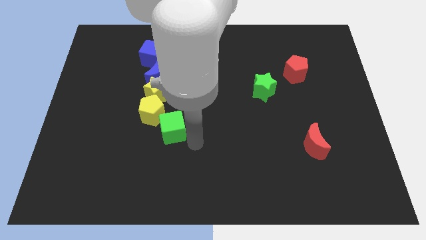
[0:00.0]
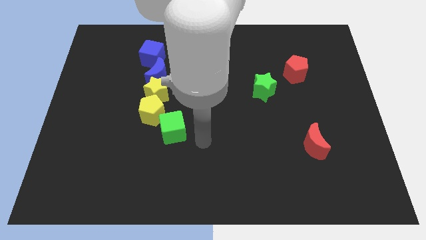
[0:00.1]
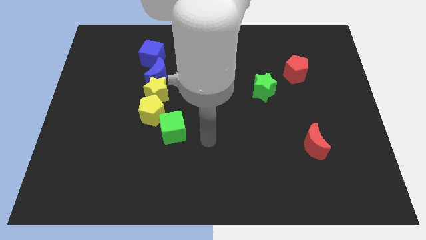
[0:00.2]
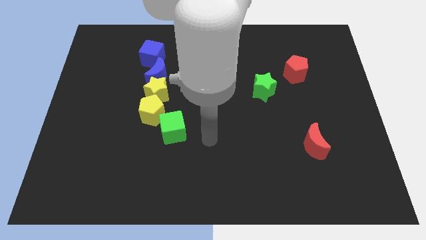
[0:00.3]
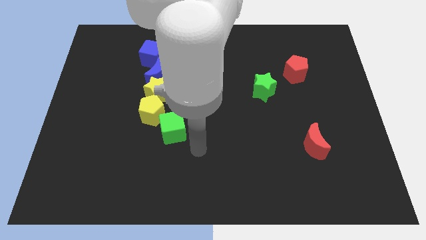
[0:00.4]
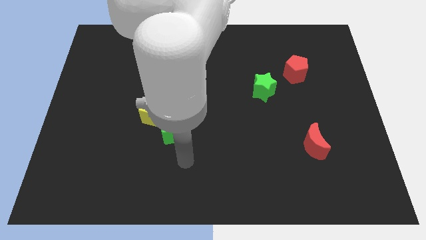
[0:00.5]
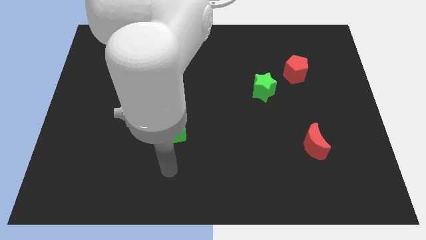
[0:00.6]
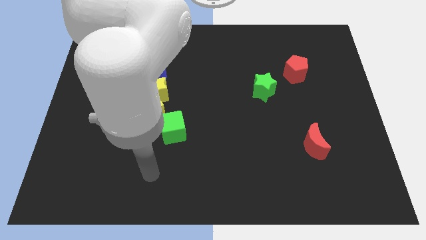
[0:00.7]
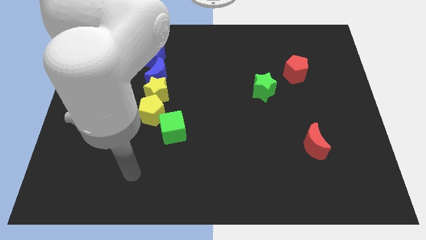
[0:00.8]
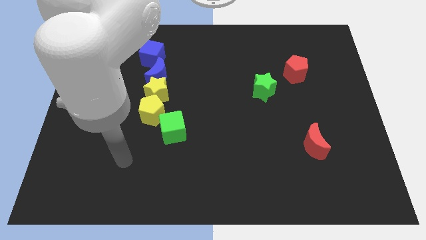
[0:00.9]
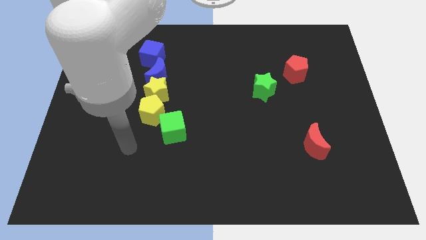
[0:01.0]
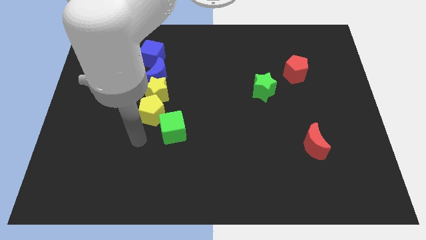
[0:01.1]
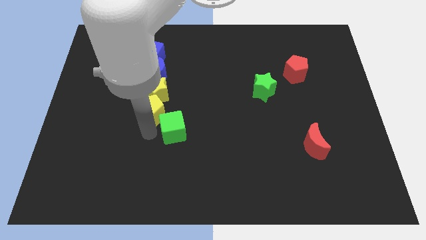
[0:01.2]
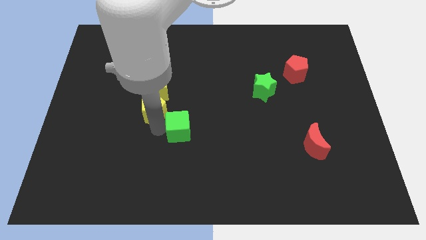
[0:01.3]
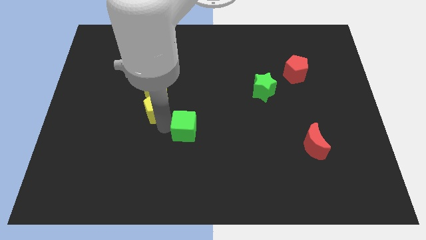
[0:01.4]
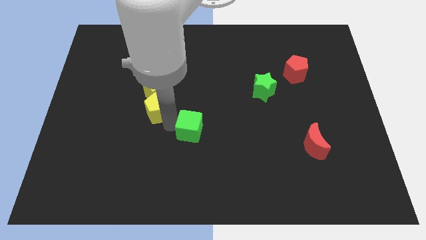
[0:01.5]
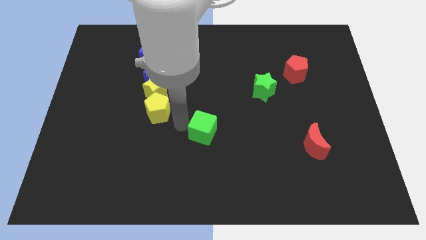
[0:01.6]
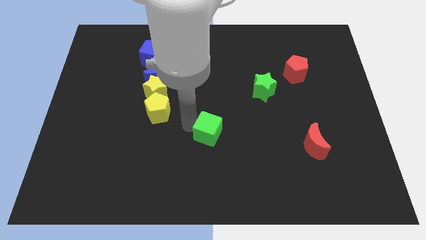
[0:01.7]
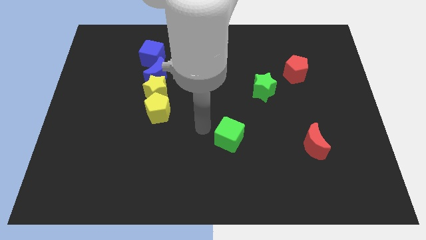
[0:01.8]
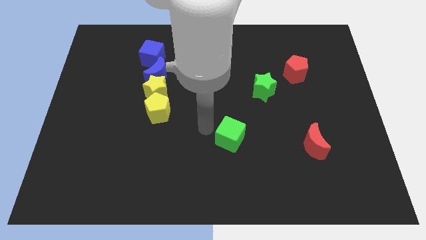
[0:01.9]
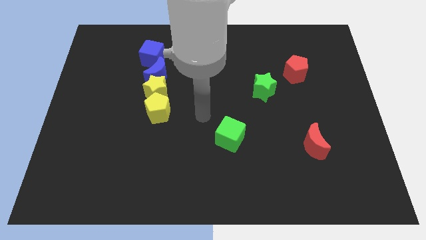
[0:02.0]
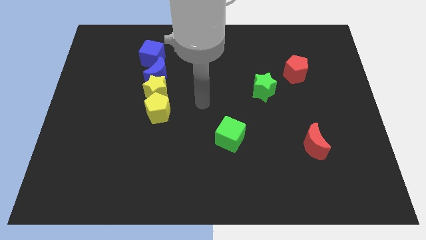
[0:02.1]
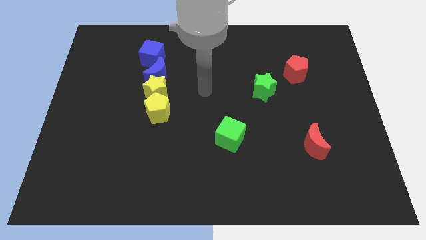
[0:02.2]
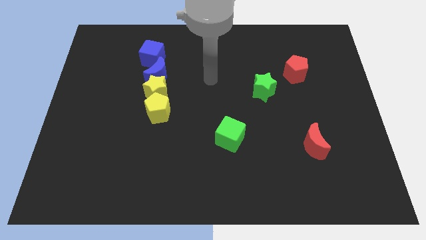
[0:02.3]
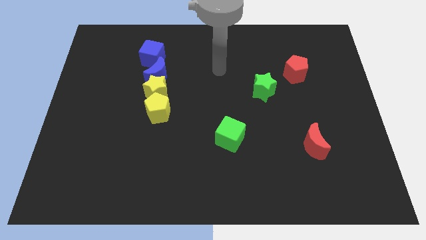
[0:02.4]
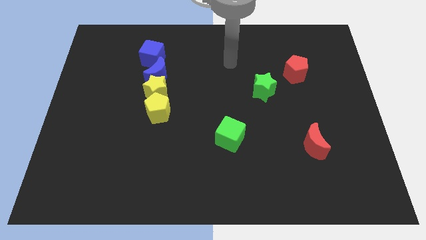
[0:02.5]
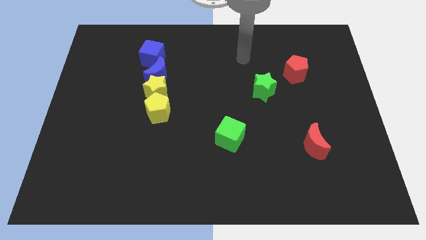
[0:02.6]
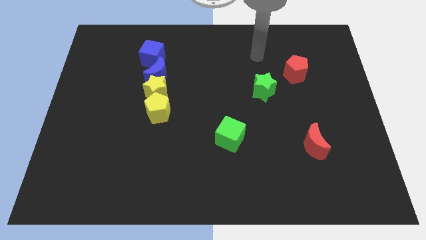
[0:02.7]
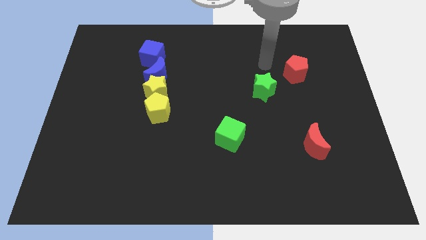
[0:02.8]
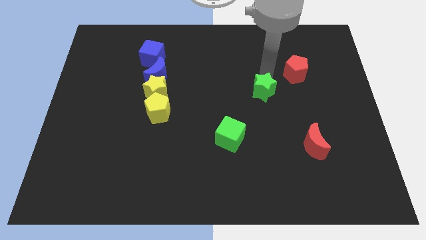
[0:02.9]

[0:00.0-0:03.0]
move the green cube away from the yellow pentagon

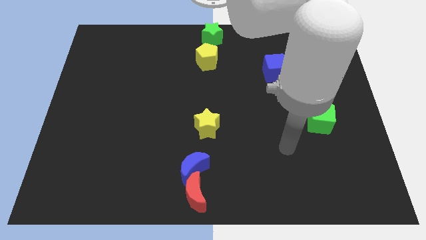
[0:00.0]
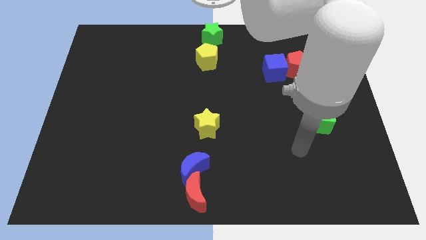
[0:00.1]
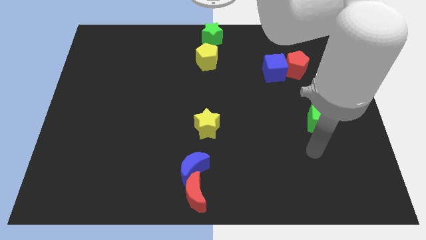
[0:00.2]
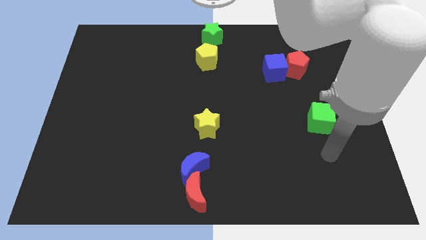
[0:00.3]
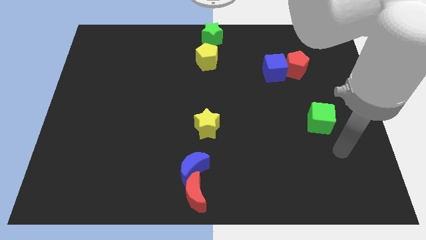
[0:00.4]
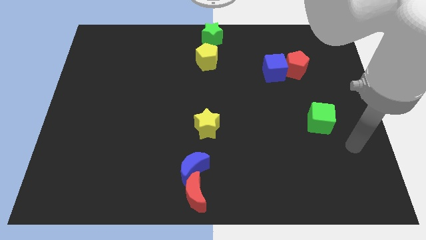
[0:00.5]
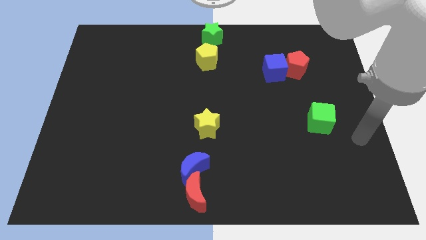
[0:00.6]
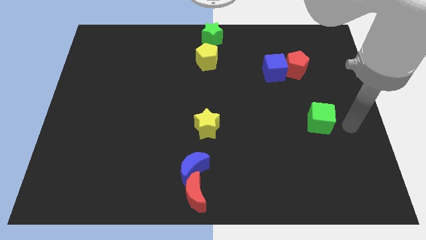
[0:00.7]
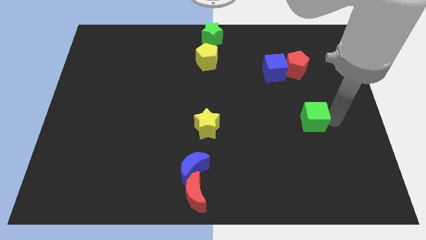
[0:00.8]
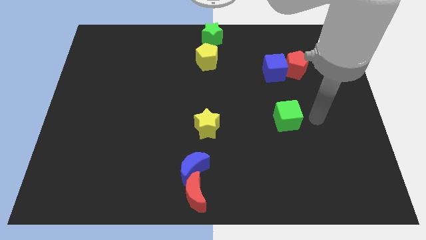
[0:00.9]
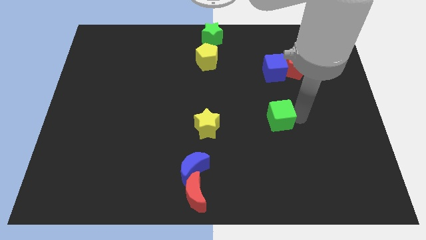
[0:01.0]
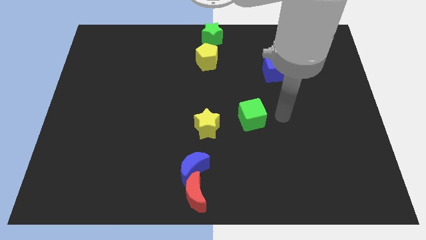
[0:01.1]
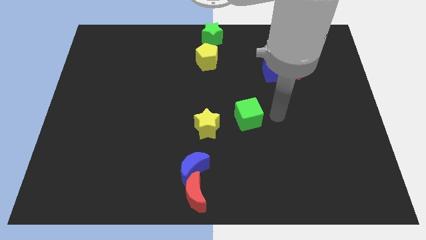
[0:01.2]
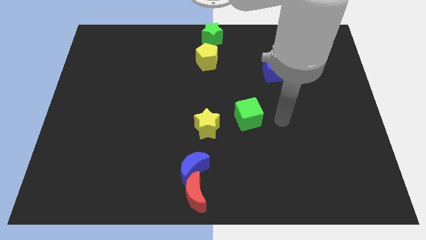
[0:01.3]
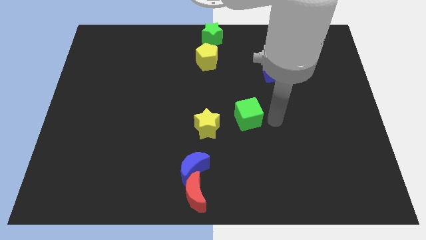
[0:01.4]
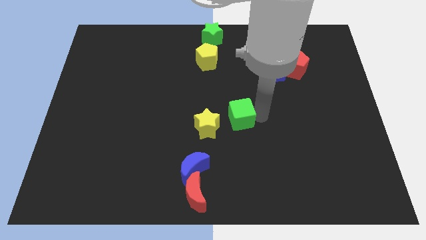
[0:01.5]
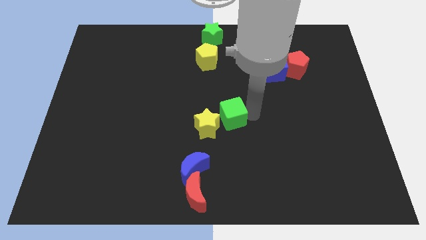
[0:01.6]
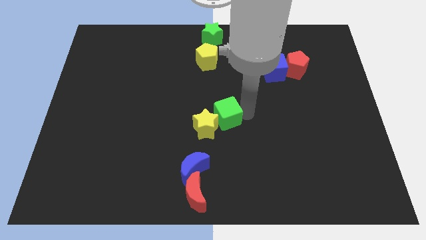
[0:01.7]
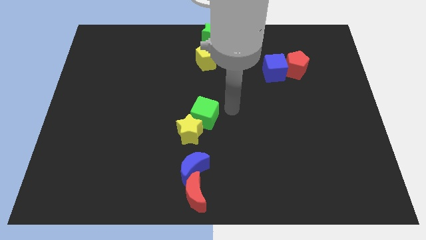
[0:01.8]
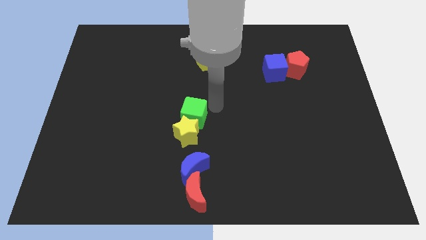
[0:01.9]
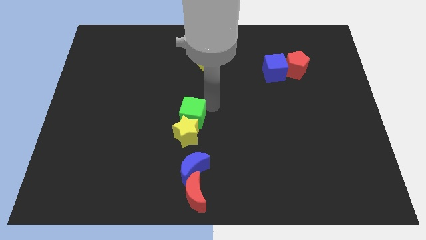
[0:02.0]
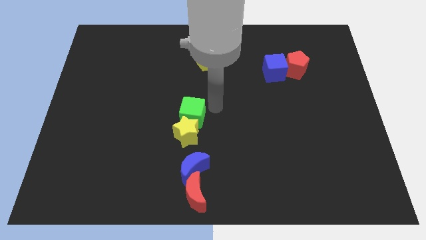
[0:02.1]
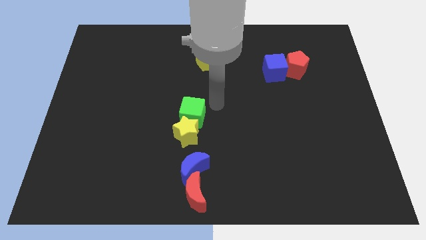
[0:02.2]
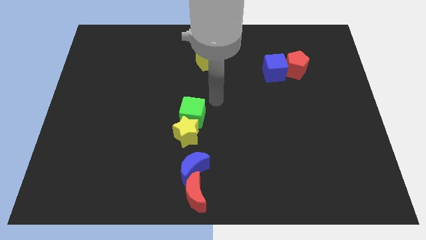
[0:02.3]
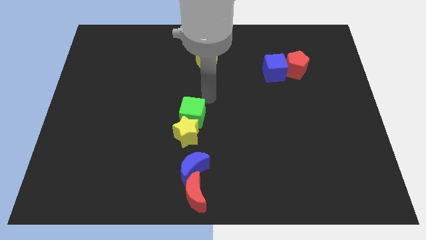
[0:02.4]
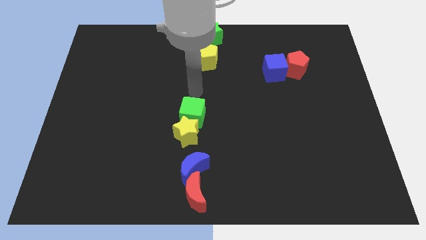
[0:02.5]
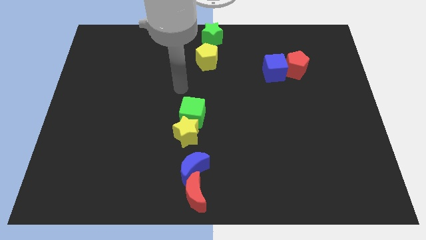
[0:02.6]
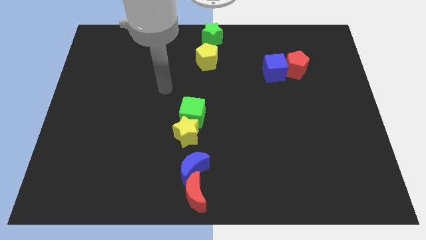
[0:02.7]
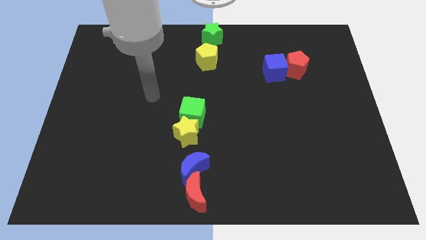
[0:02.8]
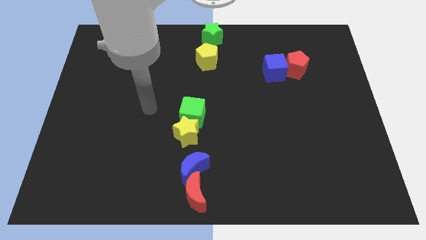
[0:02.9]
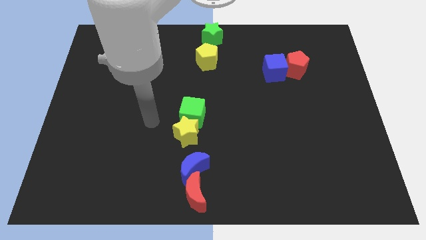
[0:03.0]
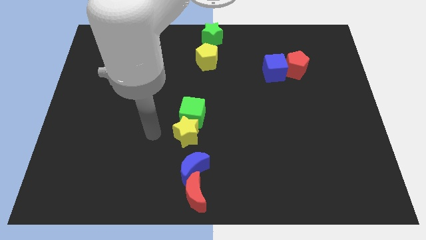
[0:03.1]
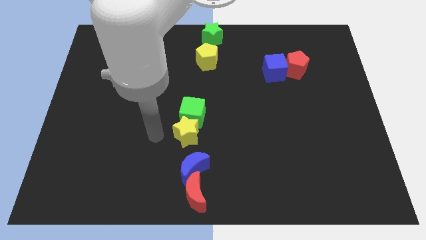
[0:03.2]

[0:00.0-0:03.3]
move green cube into the top of the yellow star

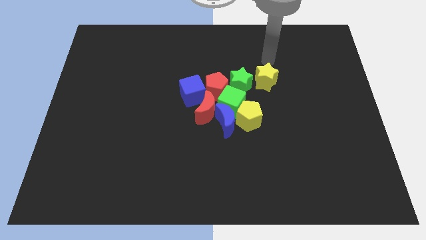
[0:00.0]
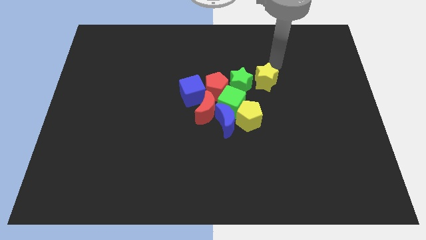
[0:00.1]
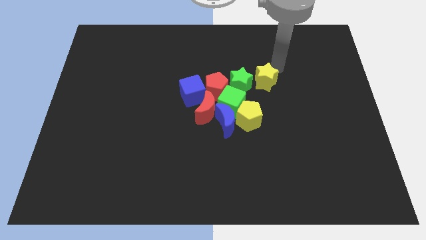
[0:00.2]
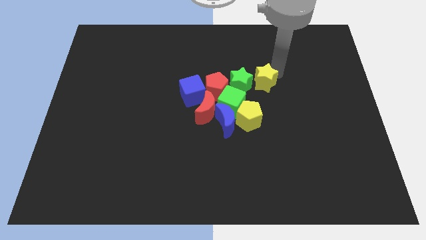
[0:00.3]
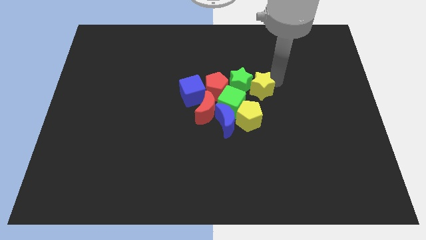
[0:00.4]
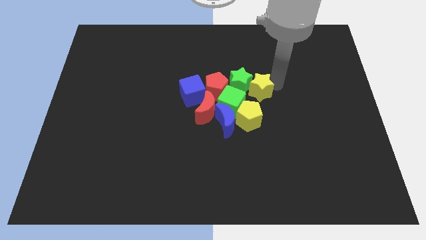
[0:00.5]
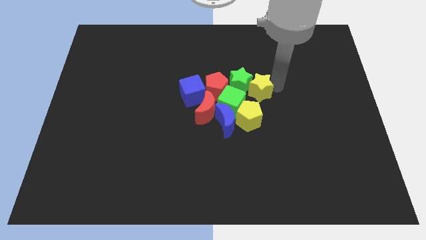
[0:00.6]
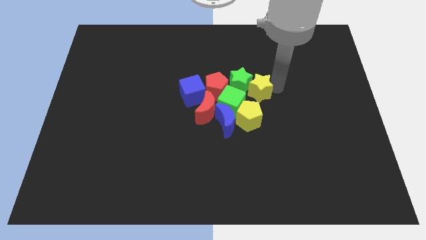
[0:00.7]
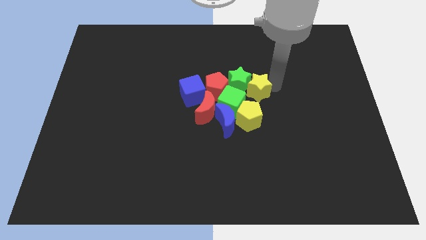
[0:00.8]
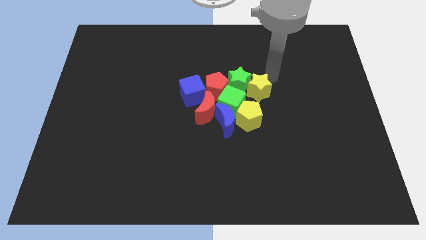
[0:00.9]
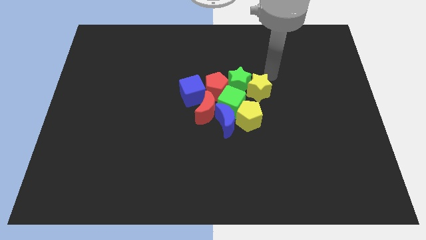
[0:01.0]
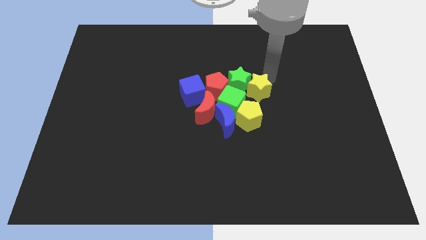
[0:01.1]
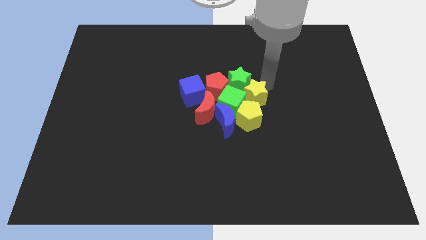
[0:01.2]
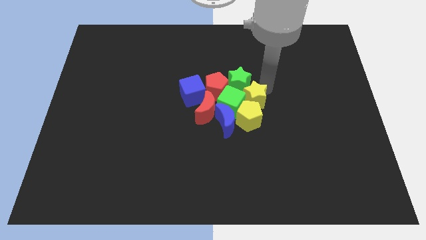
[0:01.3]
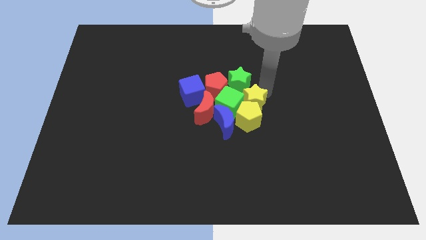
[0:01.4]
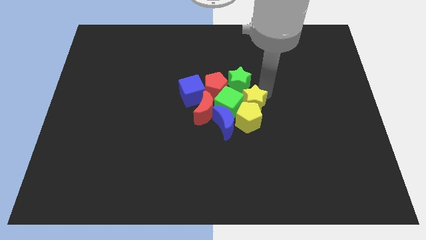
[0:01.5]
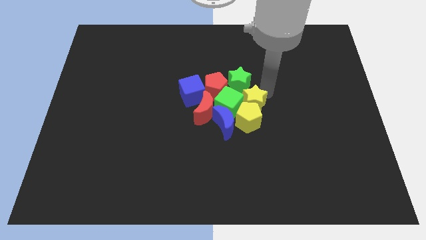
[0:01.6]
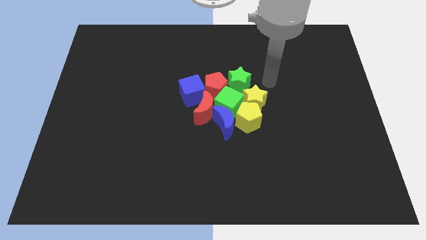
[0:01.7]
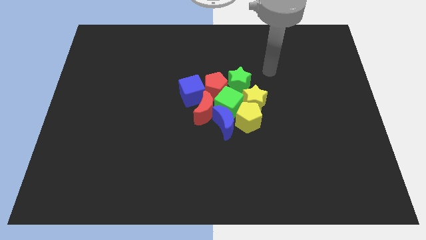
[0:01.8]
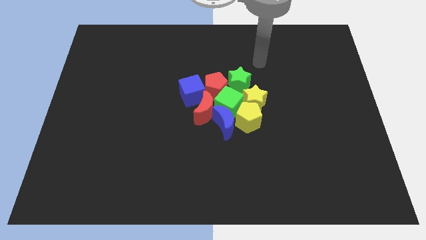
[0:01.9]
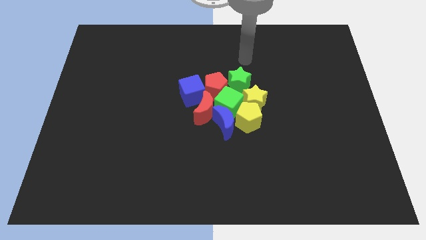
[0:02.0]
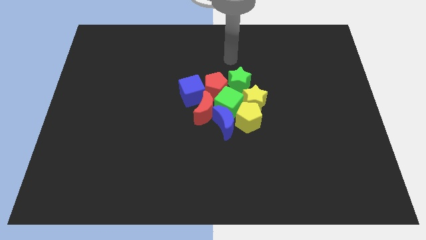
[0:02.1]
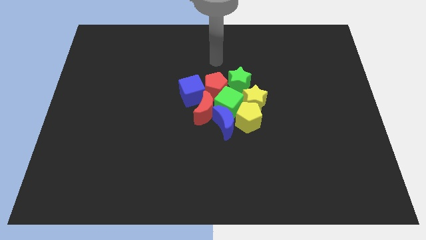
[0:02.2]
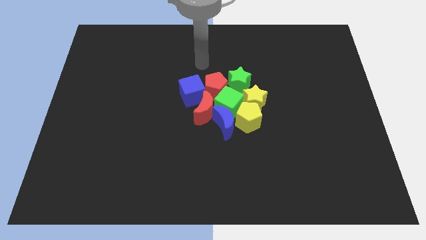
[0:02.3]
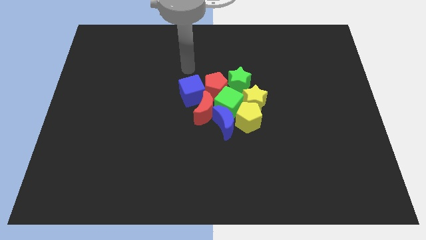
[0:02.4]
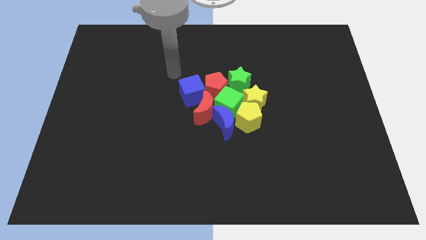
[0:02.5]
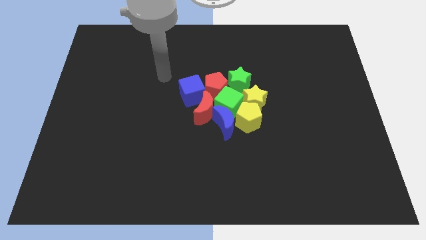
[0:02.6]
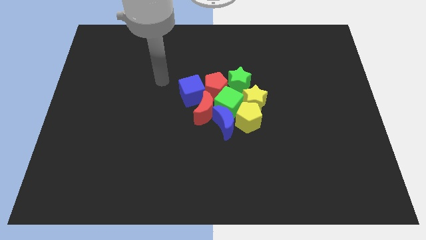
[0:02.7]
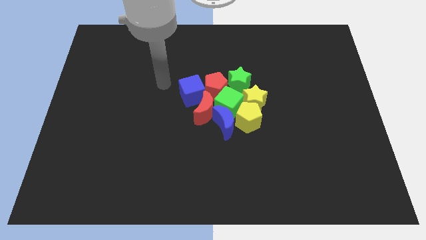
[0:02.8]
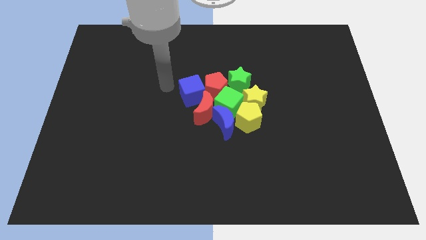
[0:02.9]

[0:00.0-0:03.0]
push yellow star into the yellow pentagon
